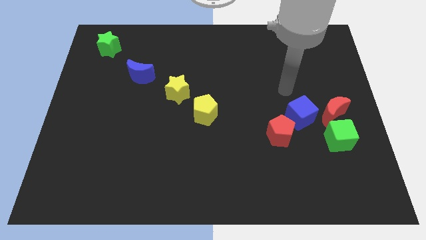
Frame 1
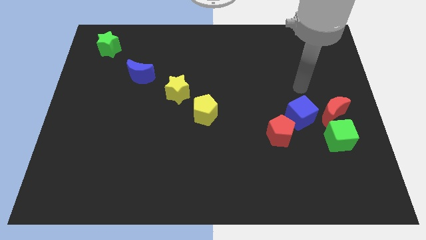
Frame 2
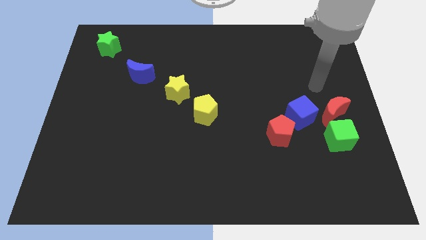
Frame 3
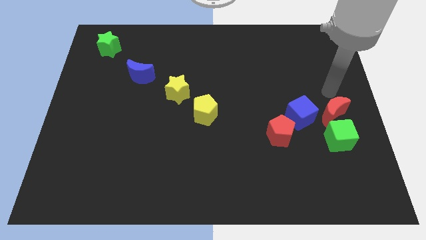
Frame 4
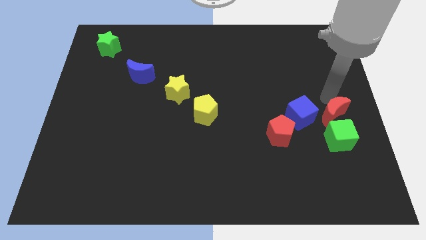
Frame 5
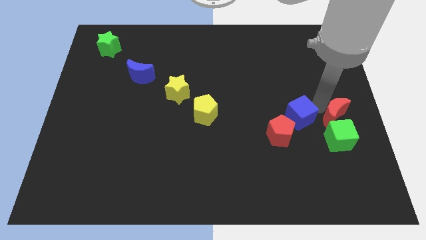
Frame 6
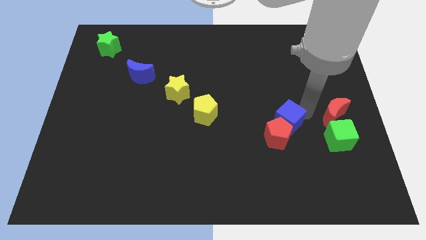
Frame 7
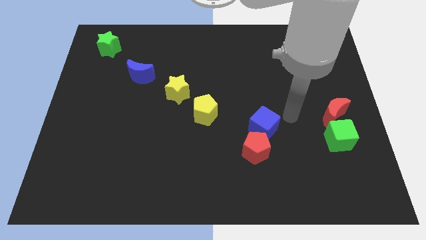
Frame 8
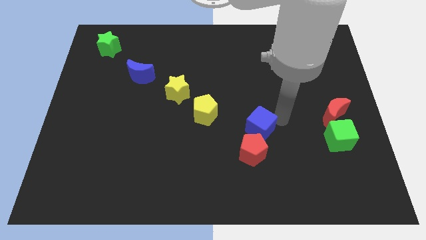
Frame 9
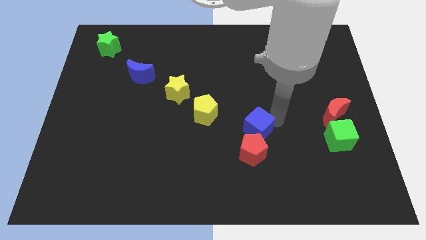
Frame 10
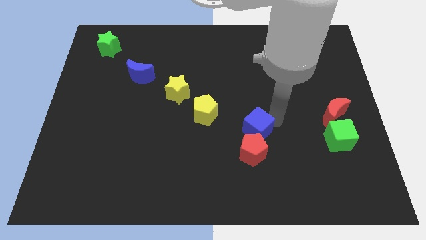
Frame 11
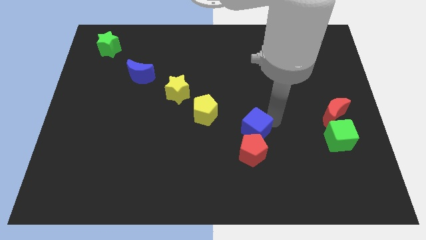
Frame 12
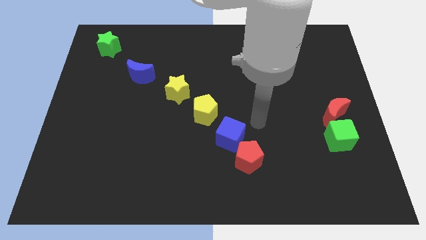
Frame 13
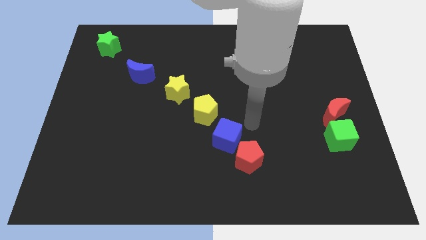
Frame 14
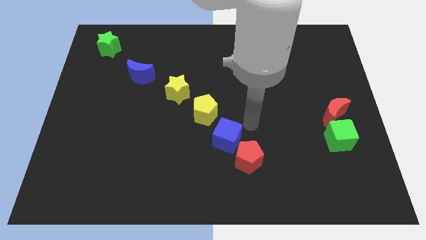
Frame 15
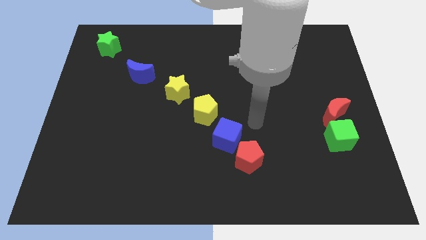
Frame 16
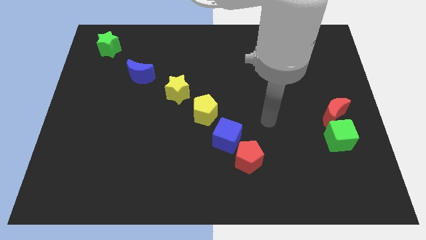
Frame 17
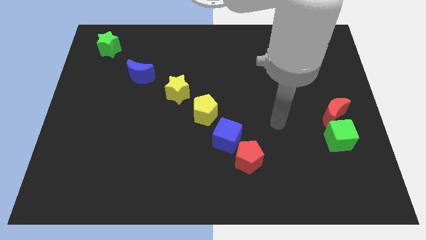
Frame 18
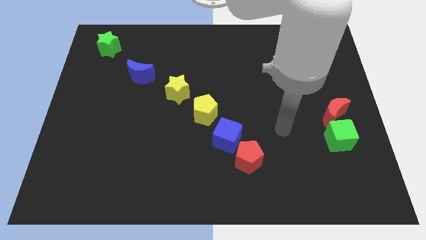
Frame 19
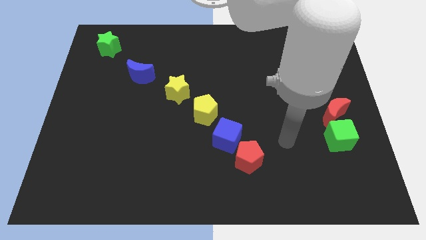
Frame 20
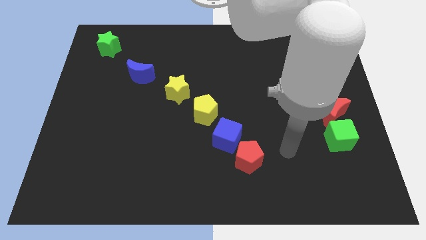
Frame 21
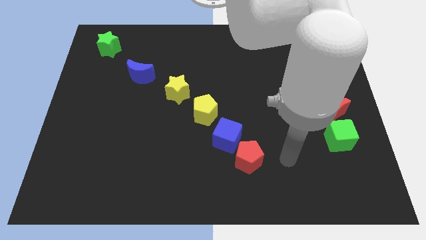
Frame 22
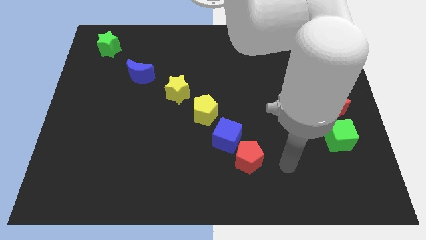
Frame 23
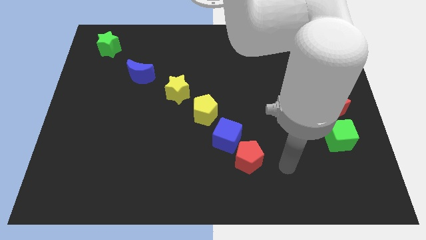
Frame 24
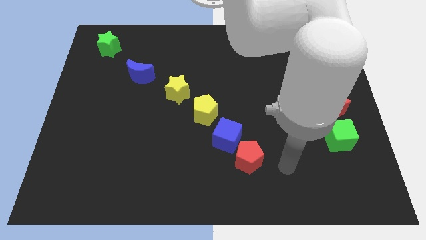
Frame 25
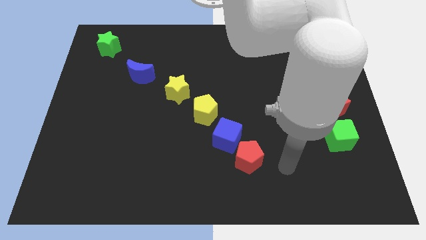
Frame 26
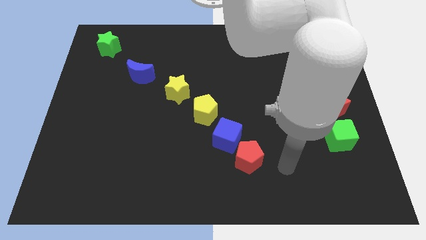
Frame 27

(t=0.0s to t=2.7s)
move the blue cube and red pentagon diagonally bottom right to yellow pentagon

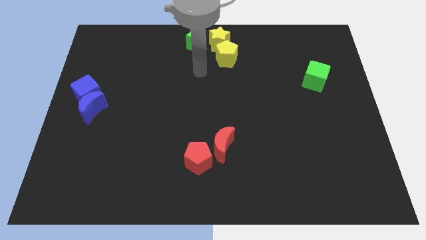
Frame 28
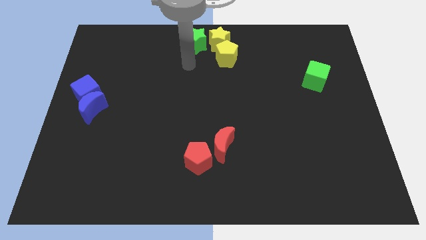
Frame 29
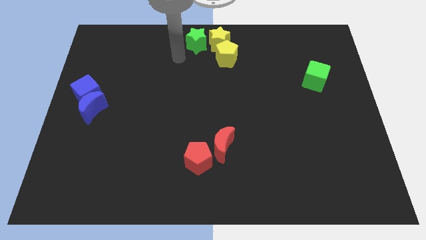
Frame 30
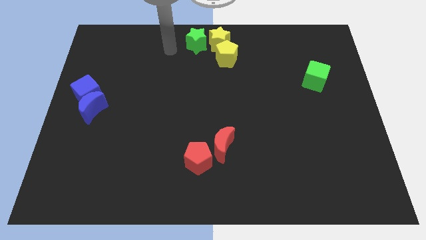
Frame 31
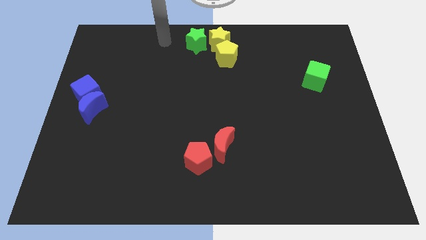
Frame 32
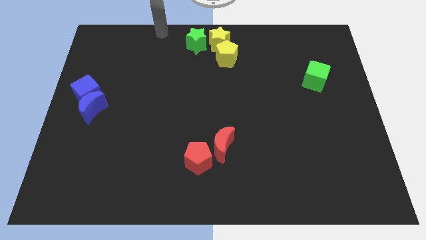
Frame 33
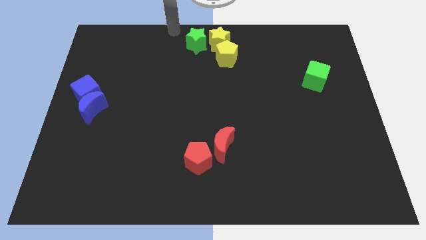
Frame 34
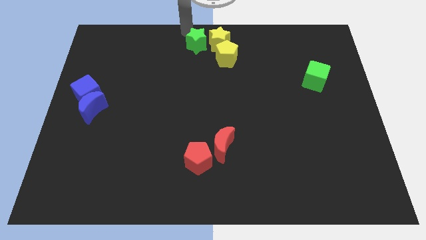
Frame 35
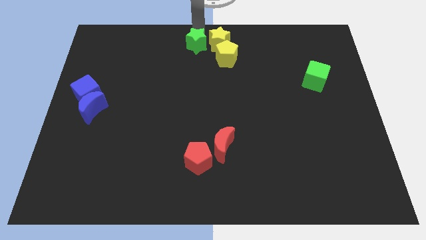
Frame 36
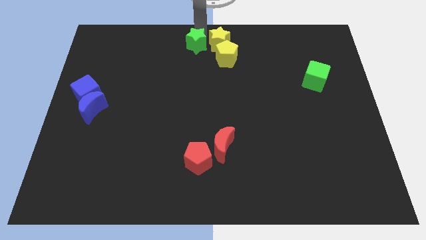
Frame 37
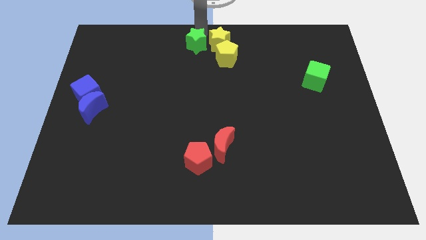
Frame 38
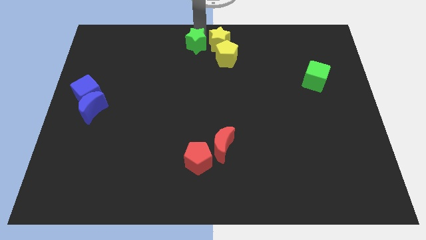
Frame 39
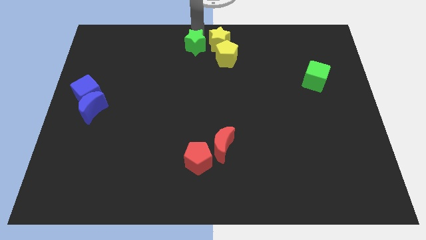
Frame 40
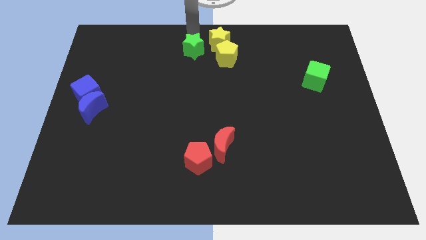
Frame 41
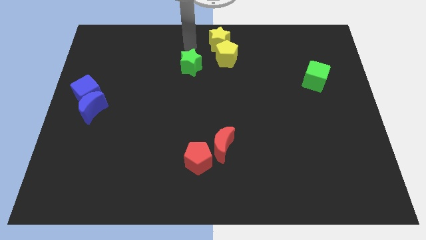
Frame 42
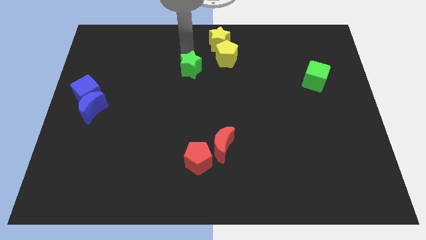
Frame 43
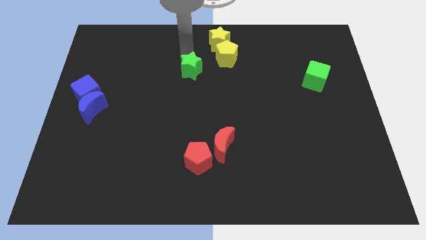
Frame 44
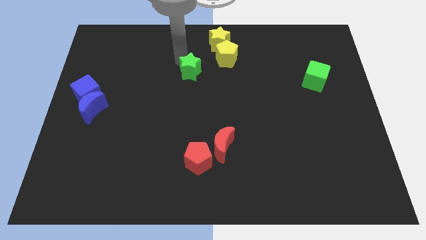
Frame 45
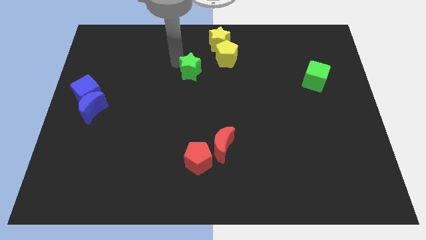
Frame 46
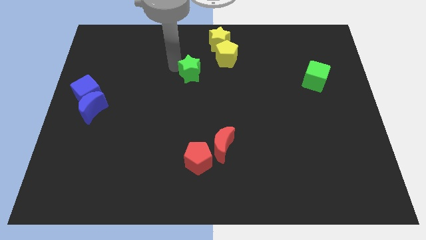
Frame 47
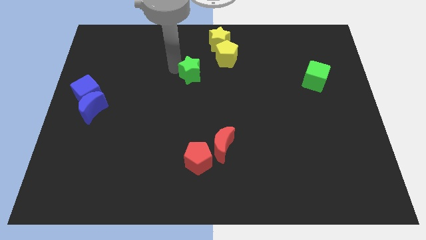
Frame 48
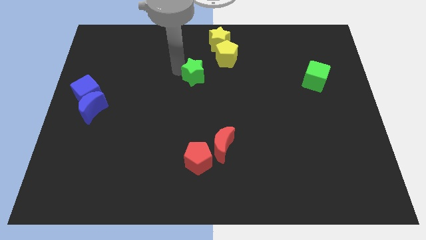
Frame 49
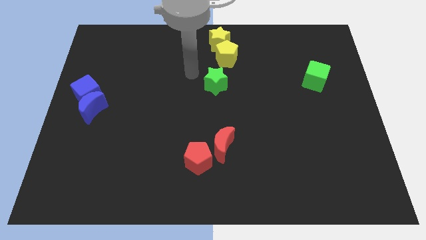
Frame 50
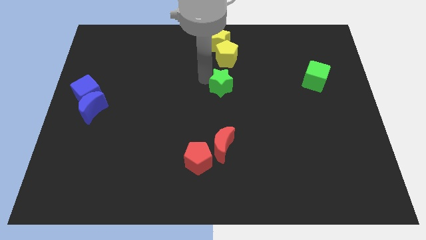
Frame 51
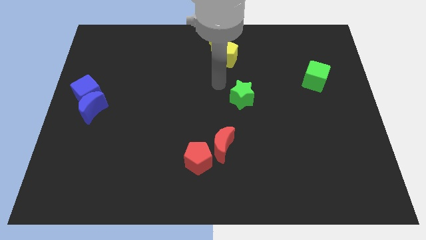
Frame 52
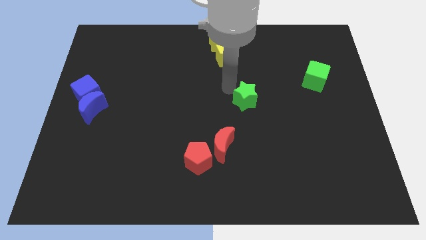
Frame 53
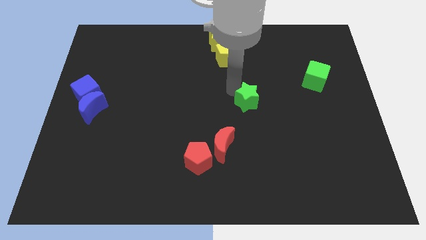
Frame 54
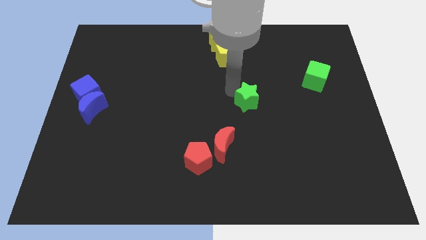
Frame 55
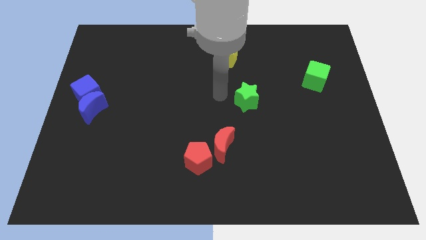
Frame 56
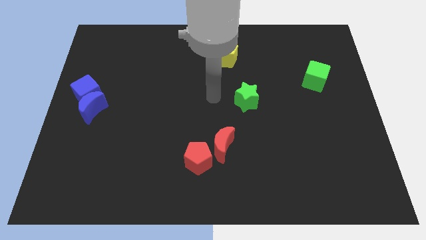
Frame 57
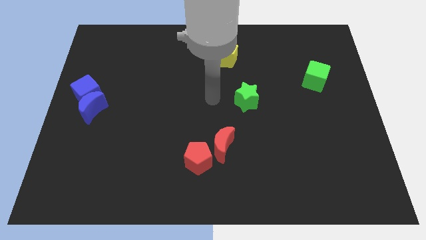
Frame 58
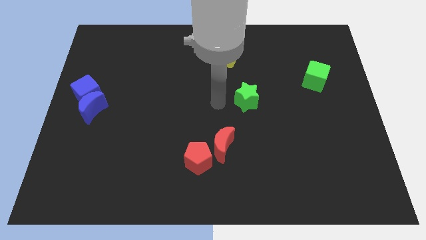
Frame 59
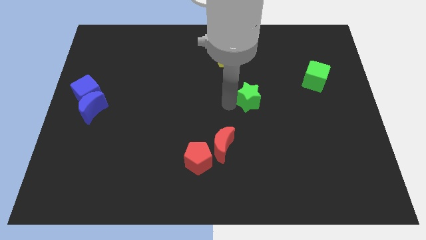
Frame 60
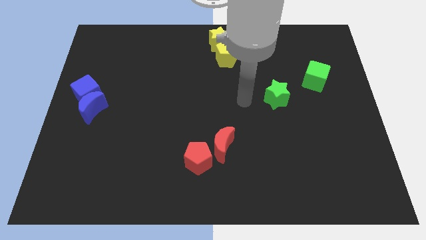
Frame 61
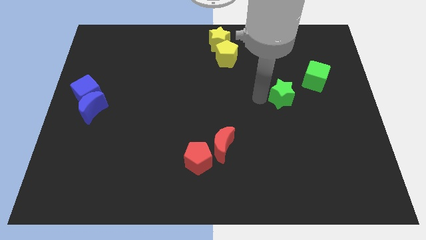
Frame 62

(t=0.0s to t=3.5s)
move the green star towards the green cube

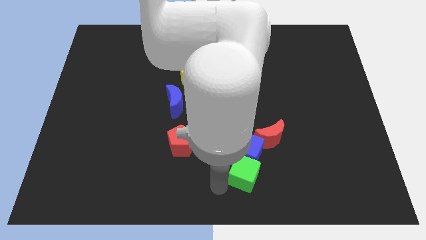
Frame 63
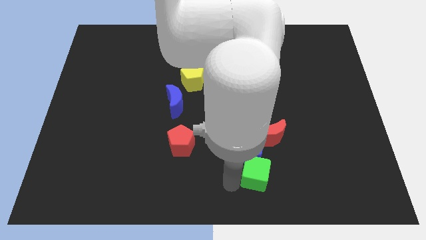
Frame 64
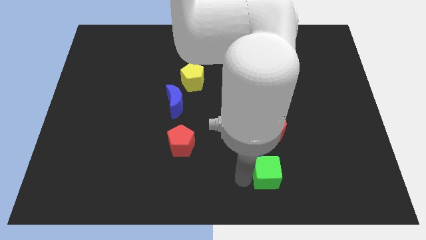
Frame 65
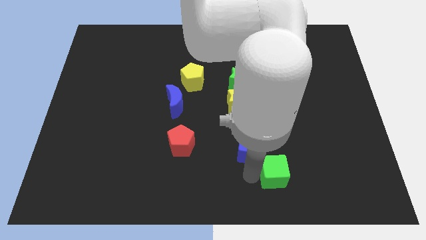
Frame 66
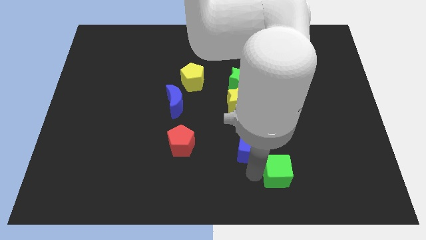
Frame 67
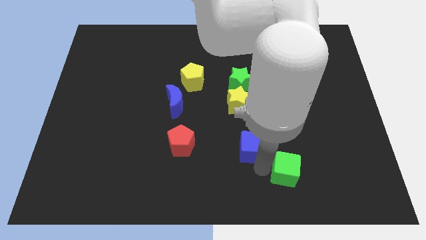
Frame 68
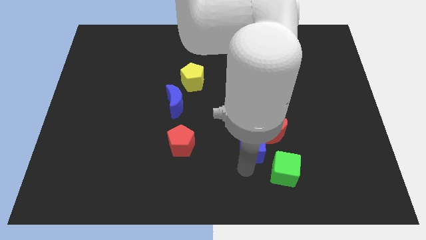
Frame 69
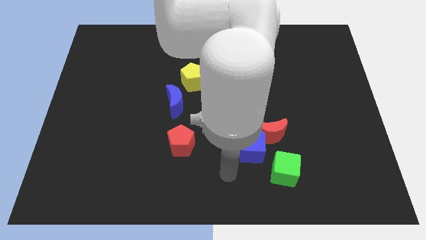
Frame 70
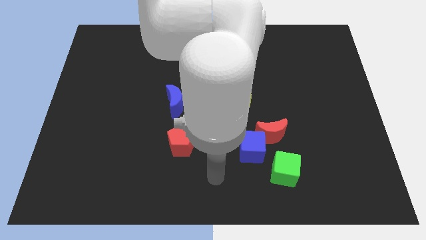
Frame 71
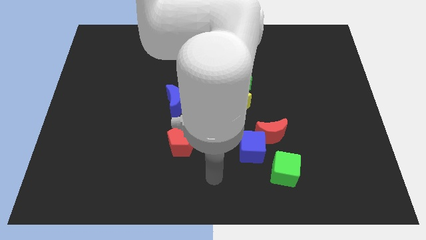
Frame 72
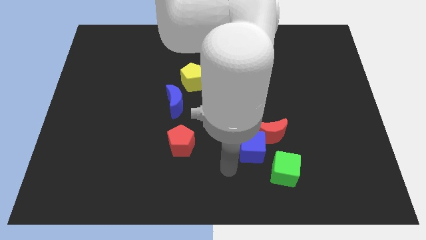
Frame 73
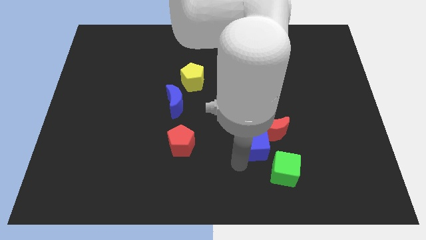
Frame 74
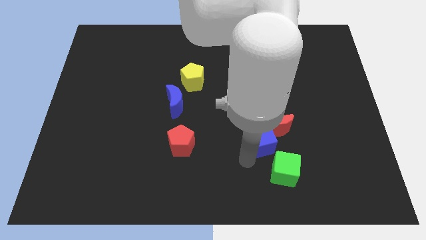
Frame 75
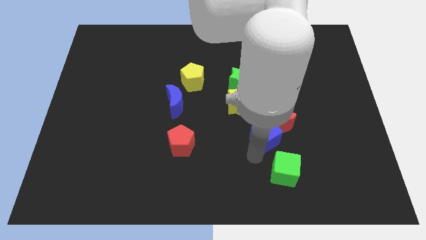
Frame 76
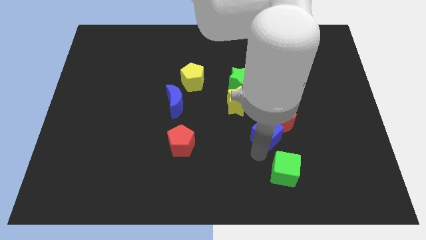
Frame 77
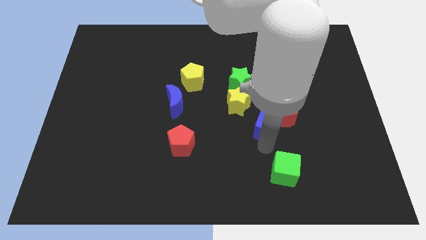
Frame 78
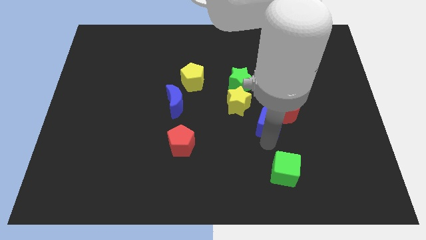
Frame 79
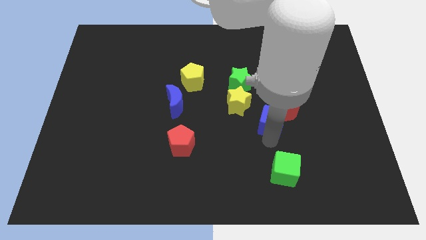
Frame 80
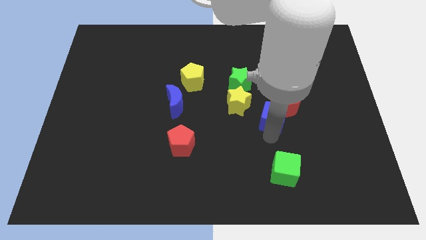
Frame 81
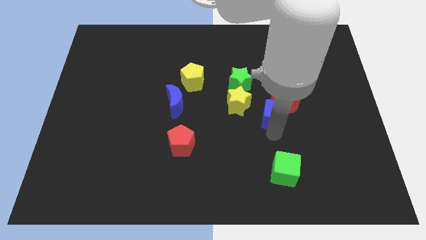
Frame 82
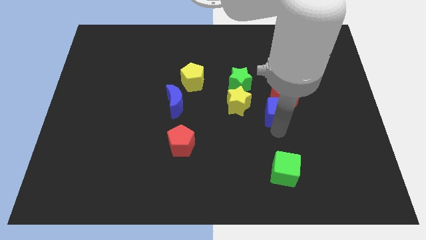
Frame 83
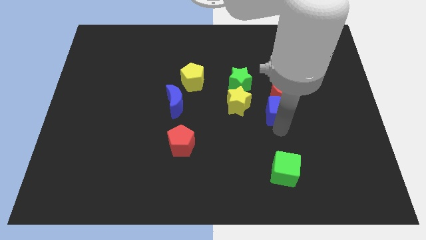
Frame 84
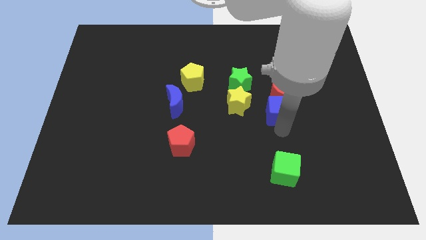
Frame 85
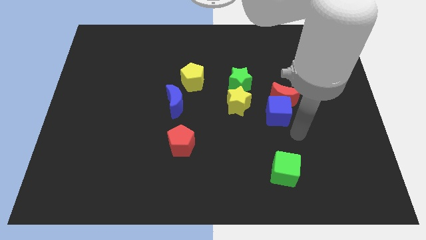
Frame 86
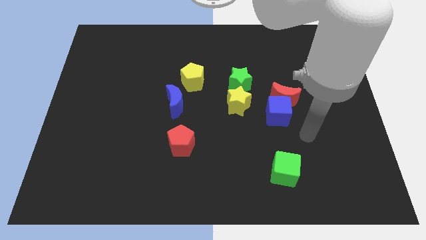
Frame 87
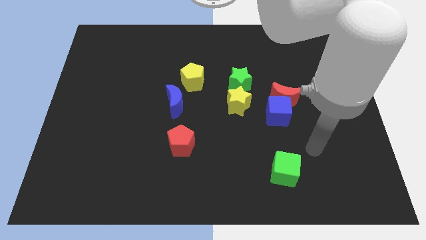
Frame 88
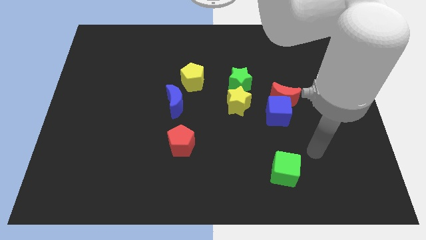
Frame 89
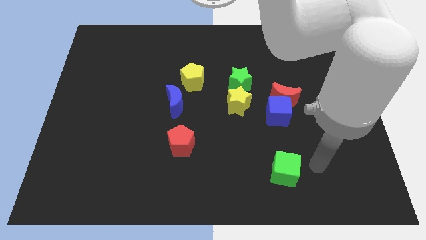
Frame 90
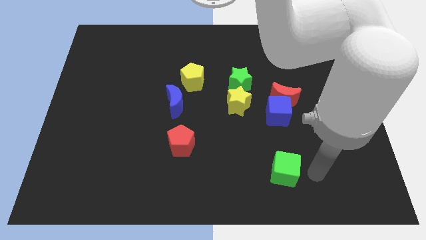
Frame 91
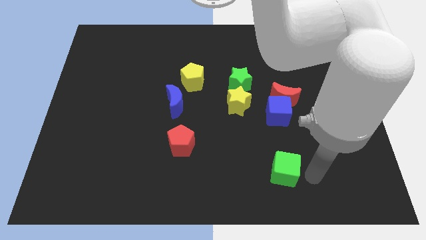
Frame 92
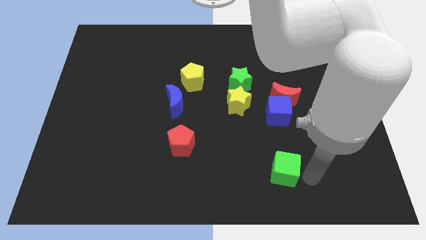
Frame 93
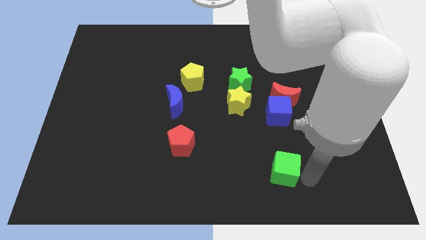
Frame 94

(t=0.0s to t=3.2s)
move the blue cube and red crescent to the right side of the two stars
